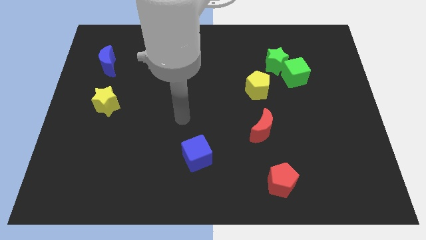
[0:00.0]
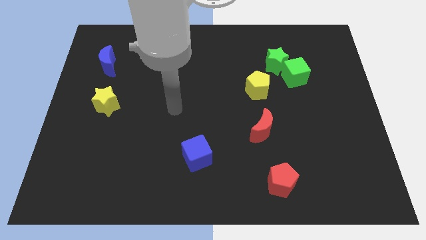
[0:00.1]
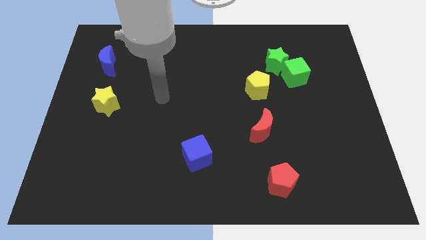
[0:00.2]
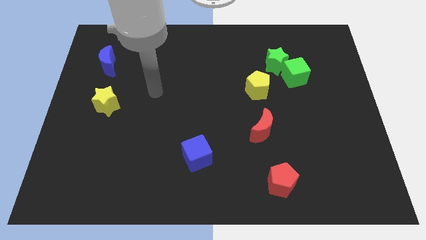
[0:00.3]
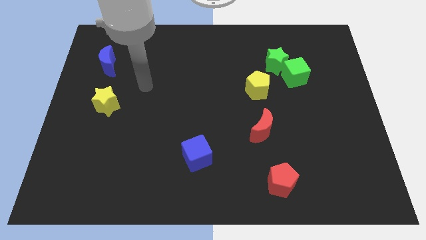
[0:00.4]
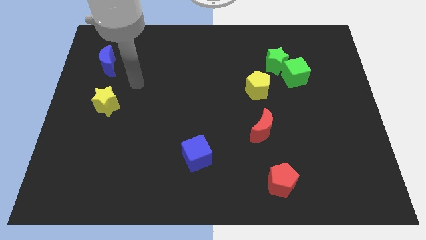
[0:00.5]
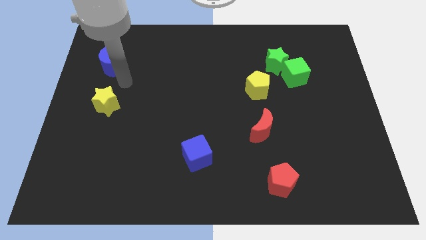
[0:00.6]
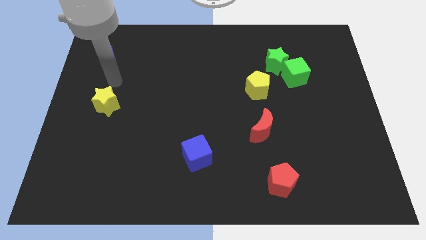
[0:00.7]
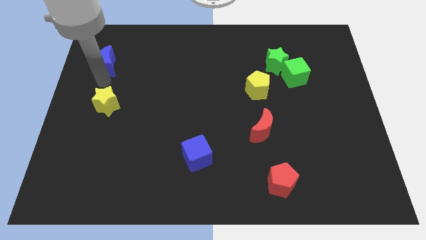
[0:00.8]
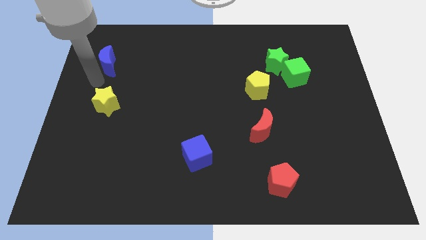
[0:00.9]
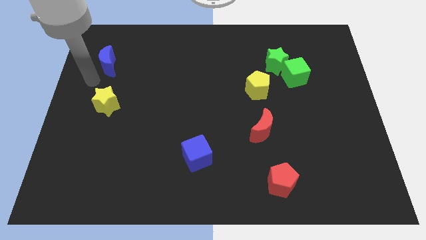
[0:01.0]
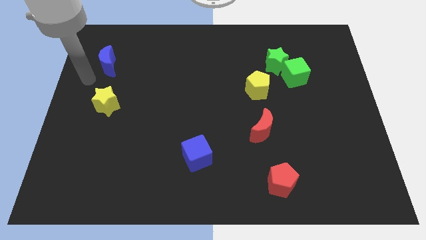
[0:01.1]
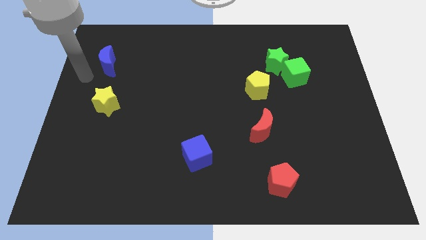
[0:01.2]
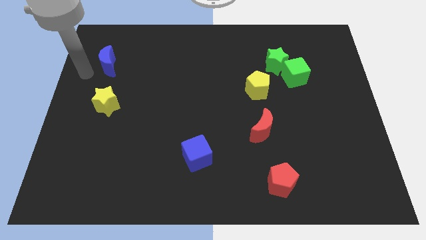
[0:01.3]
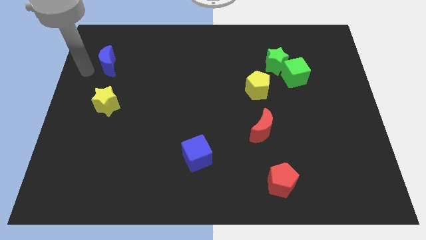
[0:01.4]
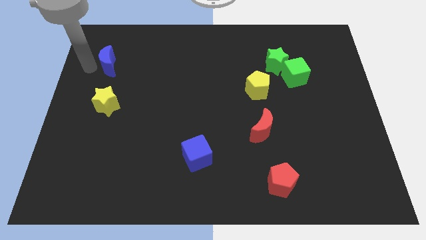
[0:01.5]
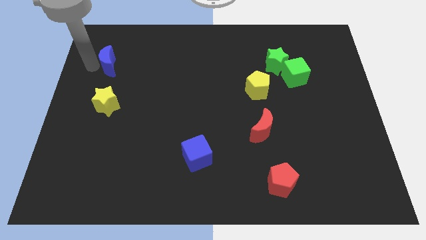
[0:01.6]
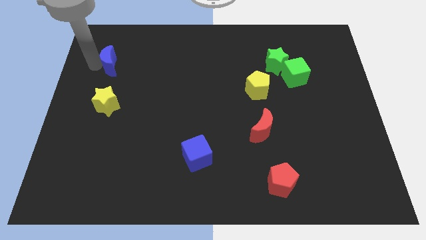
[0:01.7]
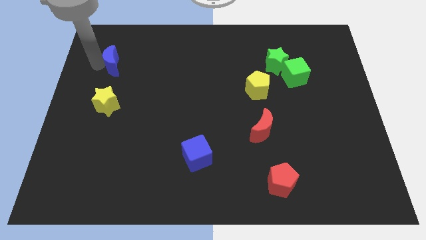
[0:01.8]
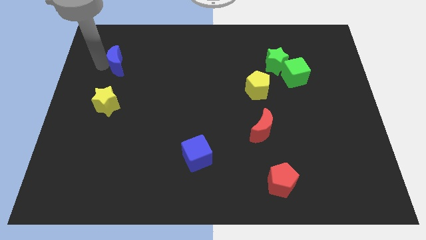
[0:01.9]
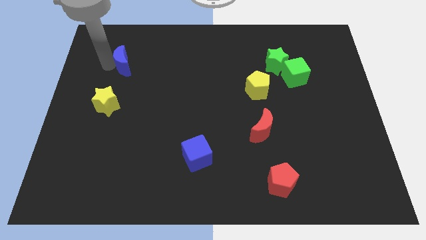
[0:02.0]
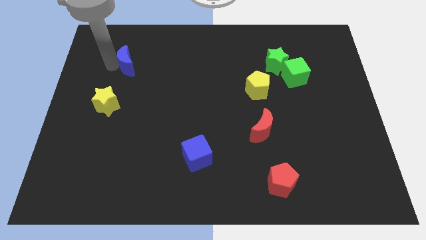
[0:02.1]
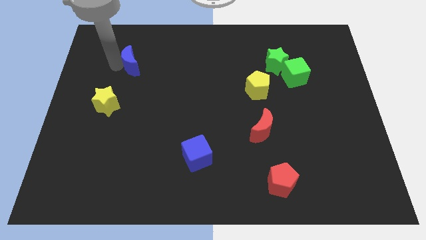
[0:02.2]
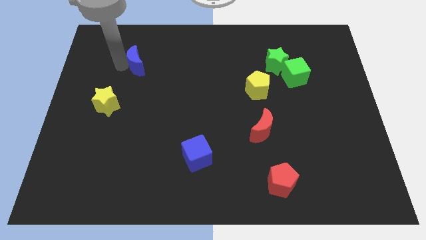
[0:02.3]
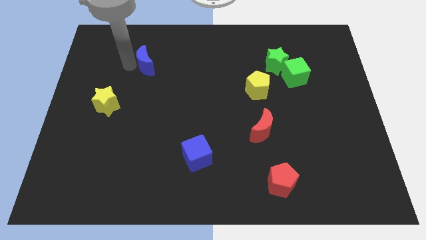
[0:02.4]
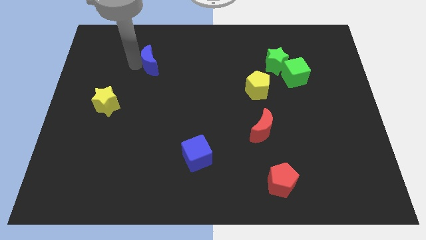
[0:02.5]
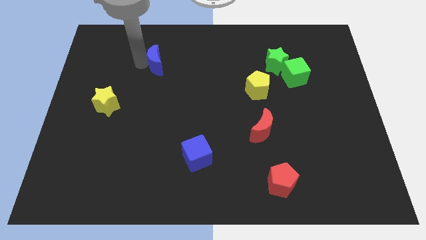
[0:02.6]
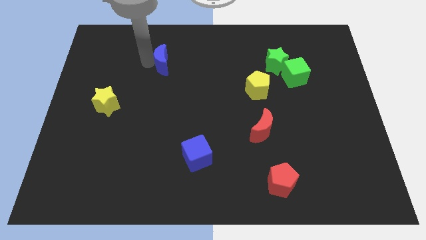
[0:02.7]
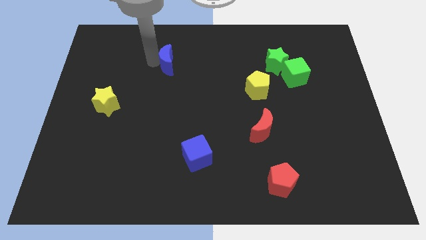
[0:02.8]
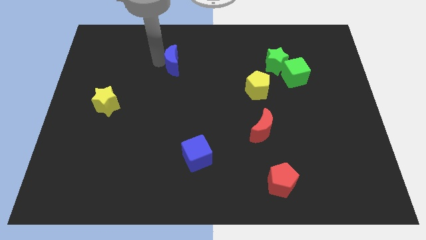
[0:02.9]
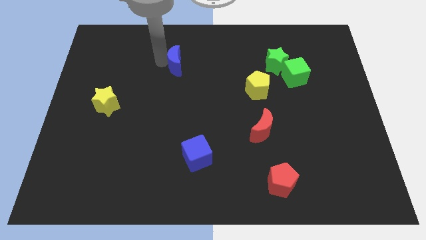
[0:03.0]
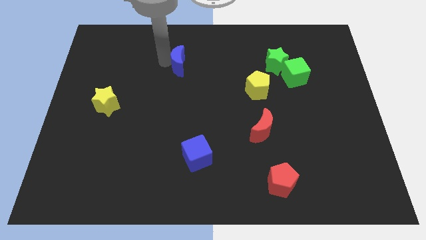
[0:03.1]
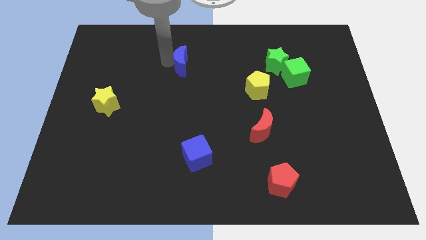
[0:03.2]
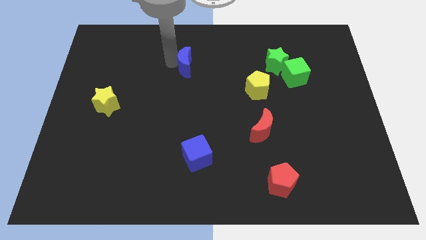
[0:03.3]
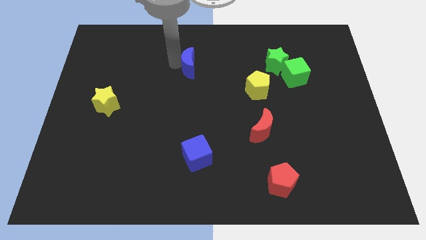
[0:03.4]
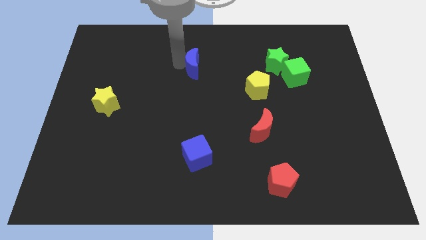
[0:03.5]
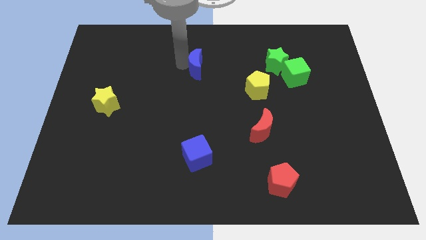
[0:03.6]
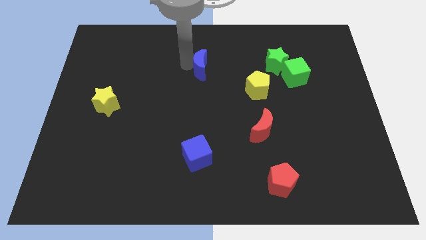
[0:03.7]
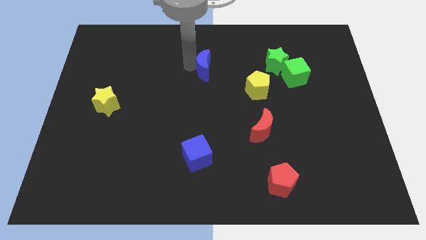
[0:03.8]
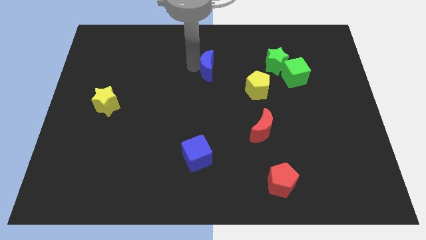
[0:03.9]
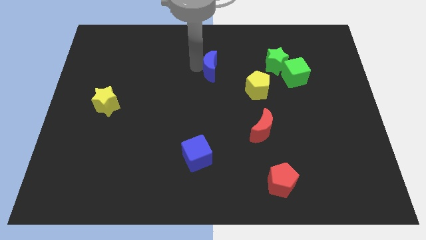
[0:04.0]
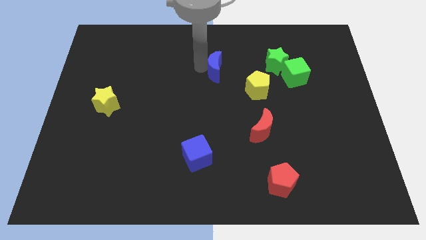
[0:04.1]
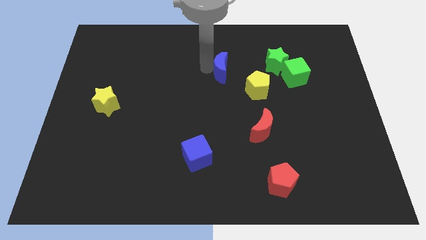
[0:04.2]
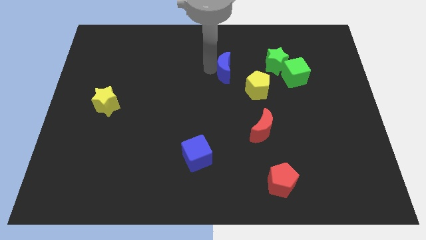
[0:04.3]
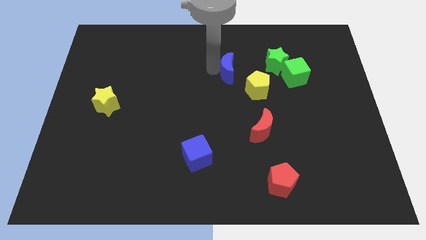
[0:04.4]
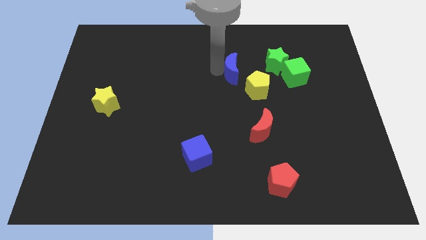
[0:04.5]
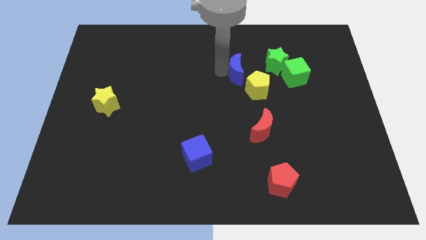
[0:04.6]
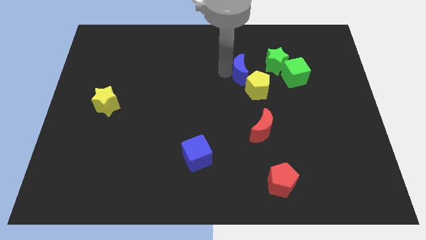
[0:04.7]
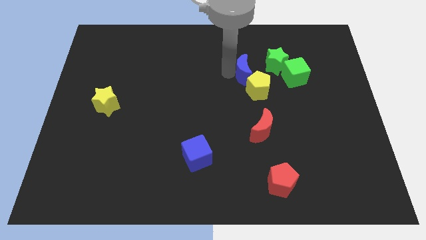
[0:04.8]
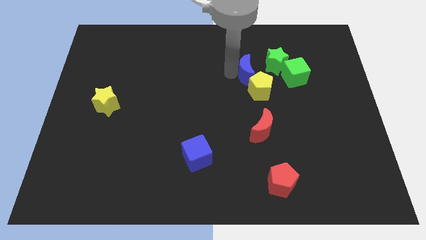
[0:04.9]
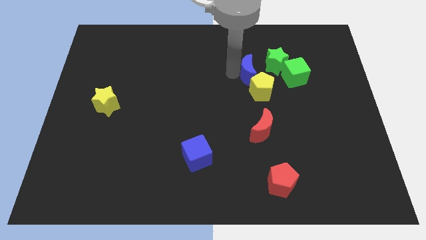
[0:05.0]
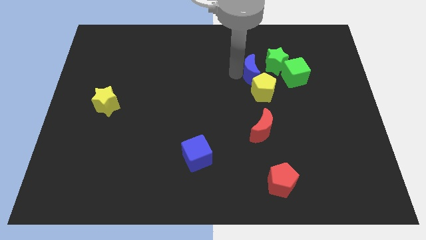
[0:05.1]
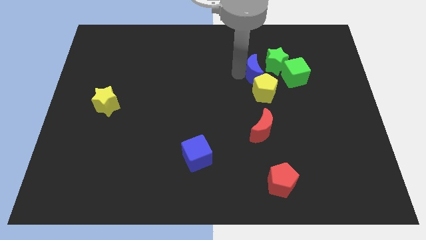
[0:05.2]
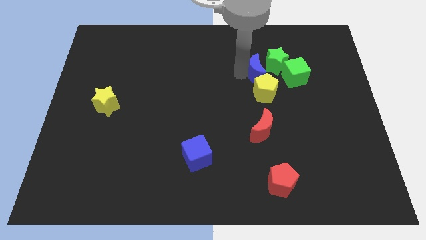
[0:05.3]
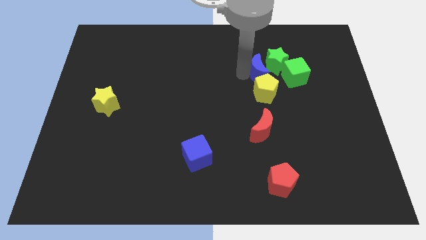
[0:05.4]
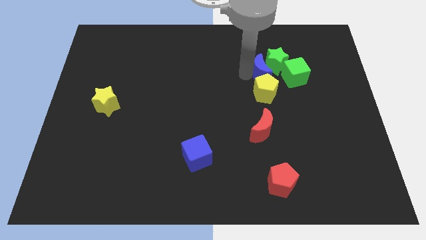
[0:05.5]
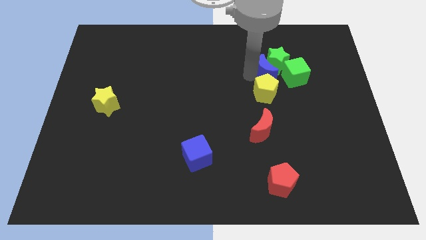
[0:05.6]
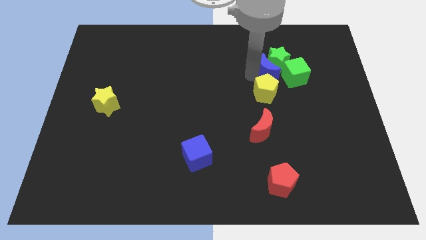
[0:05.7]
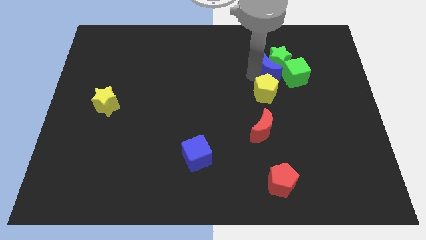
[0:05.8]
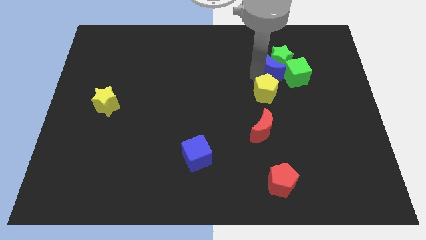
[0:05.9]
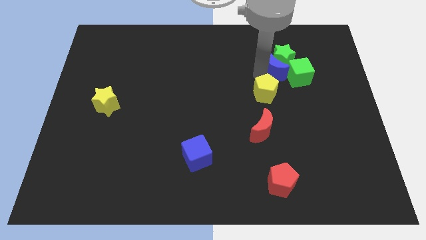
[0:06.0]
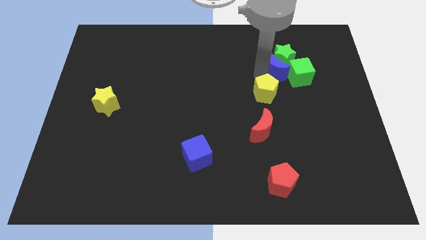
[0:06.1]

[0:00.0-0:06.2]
slide the blue moon to the green cube

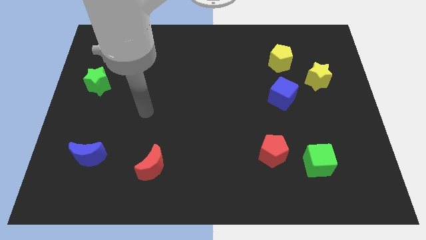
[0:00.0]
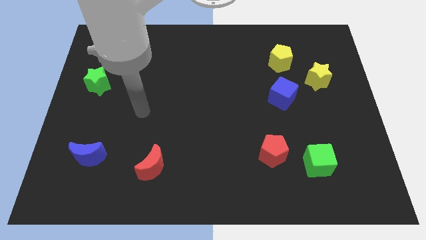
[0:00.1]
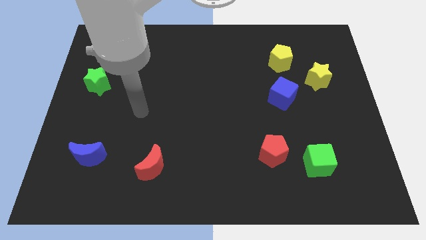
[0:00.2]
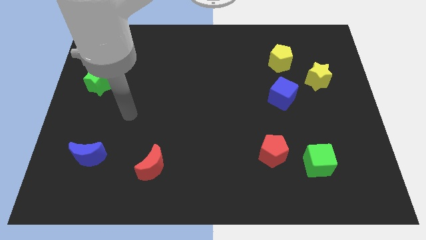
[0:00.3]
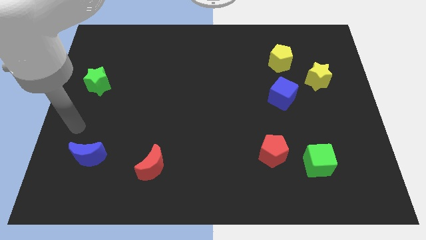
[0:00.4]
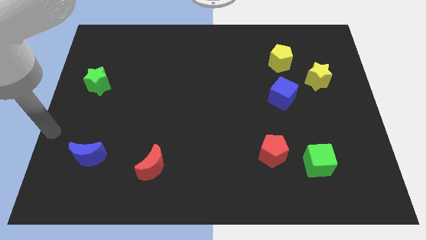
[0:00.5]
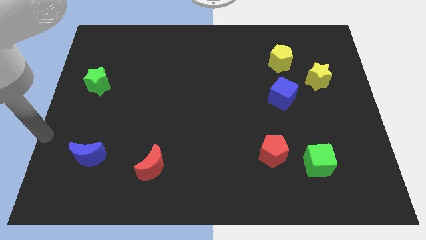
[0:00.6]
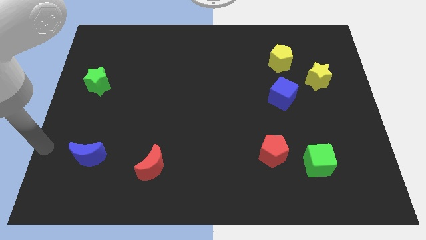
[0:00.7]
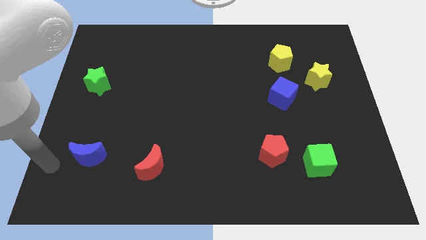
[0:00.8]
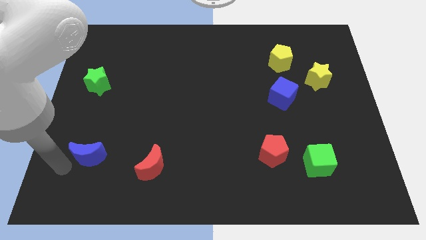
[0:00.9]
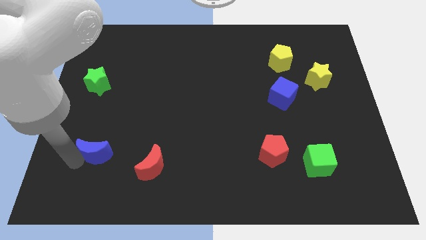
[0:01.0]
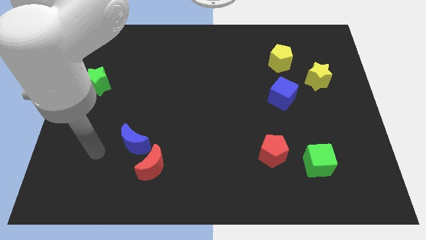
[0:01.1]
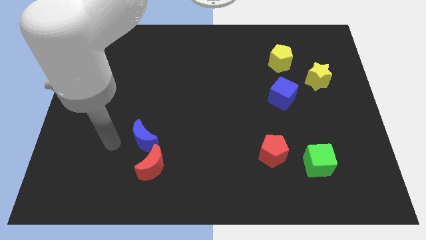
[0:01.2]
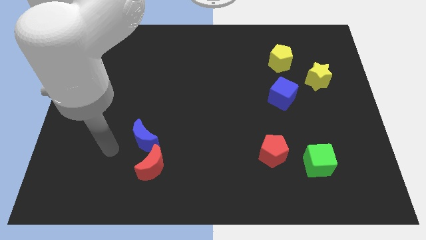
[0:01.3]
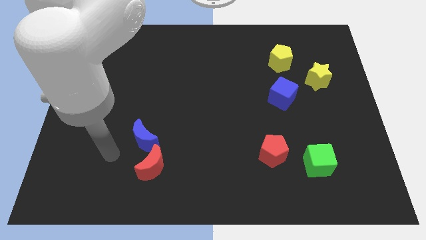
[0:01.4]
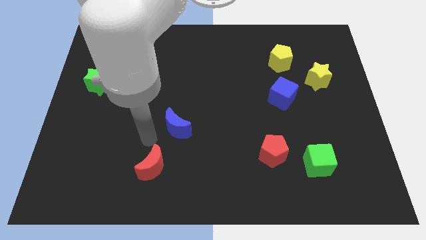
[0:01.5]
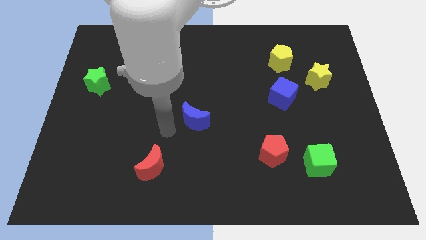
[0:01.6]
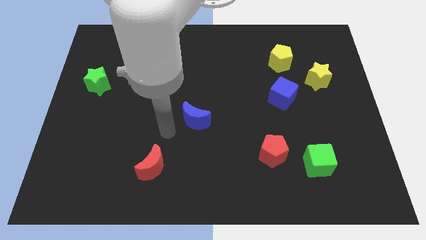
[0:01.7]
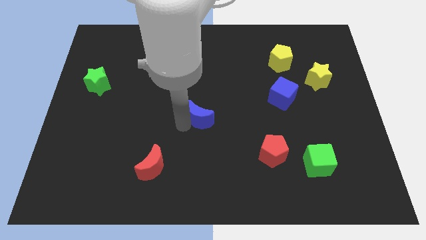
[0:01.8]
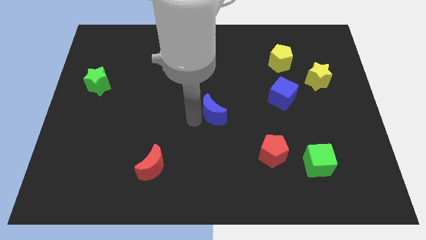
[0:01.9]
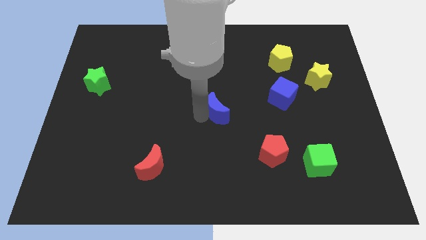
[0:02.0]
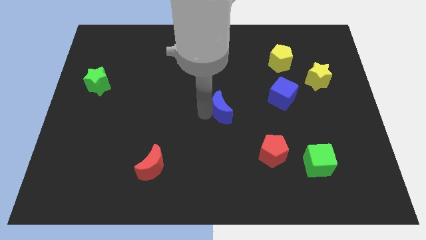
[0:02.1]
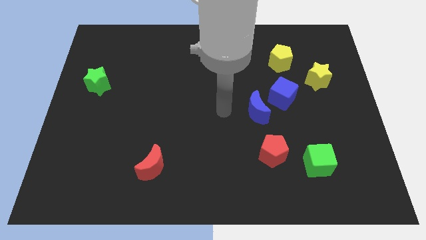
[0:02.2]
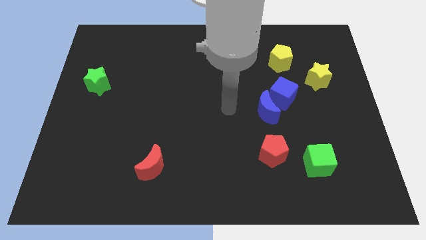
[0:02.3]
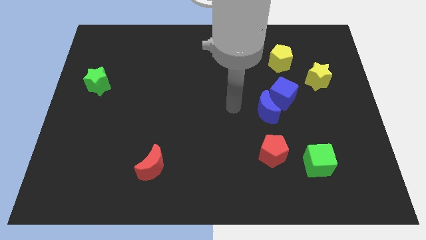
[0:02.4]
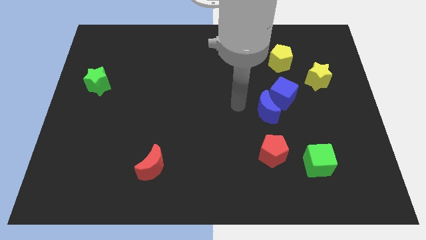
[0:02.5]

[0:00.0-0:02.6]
push the blue moon to the blue cube
